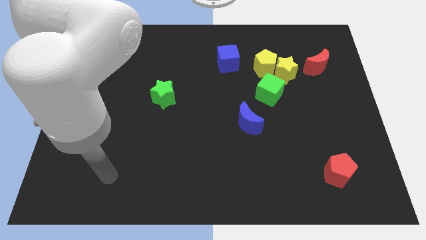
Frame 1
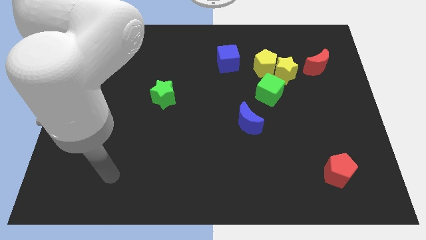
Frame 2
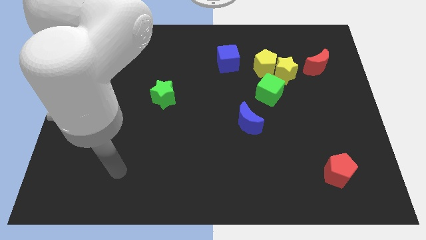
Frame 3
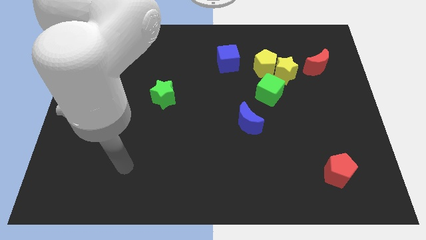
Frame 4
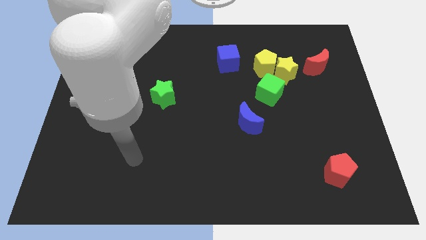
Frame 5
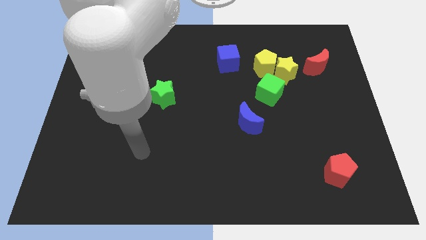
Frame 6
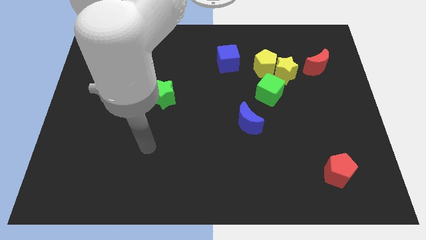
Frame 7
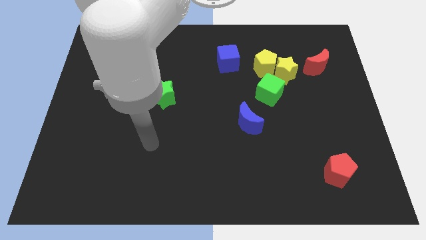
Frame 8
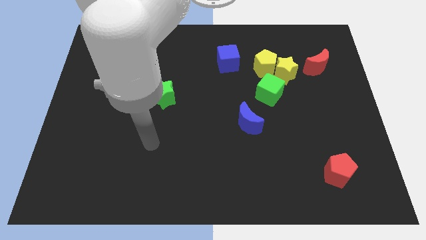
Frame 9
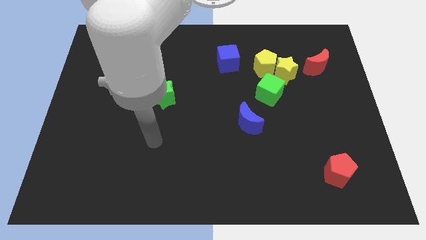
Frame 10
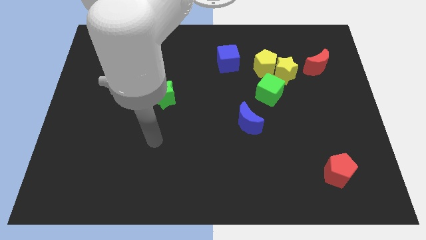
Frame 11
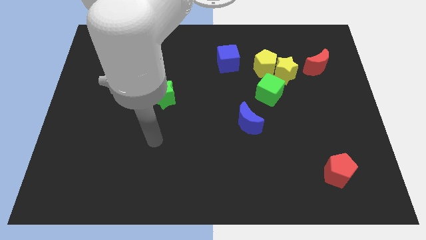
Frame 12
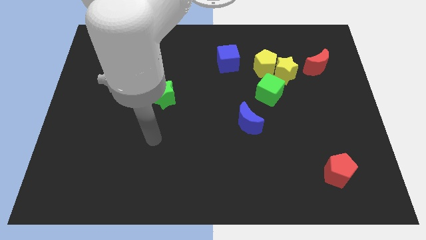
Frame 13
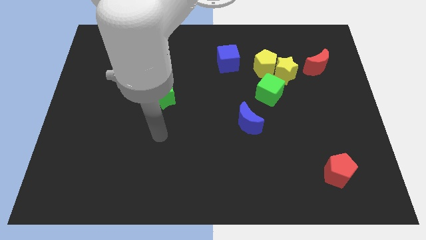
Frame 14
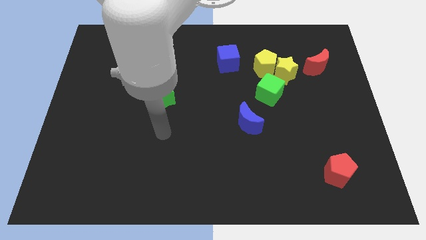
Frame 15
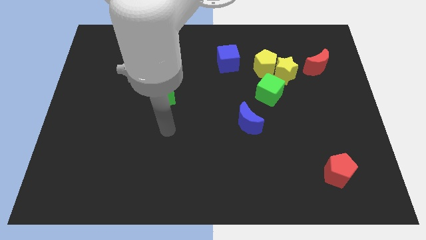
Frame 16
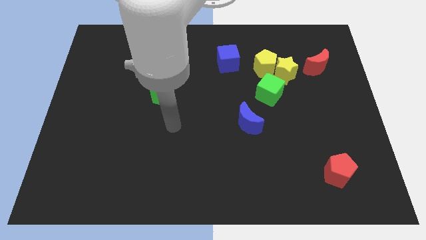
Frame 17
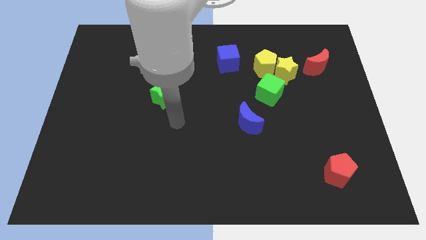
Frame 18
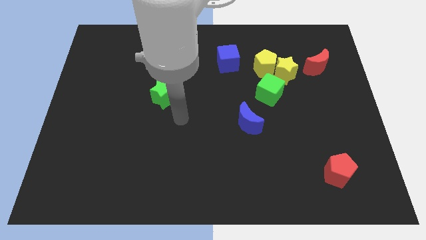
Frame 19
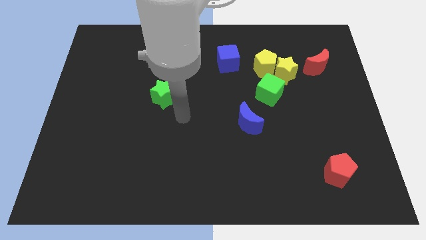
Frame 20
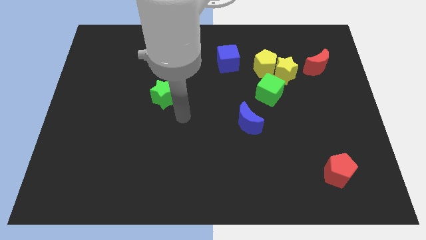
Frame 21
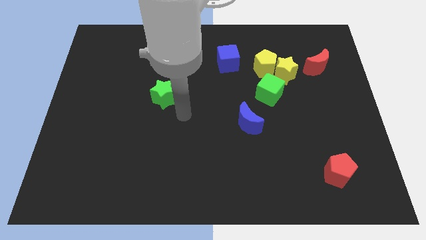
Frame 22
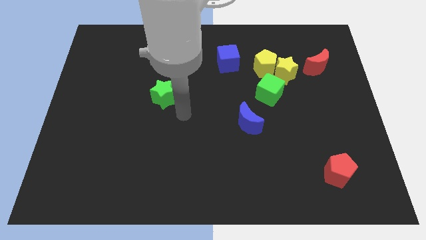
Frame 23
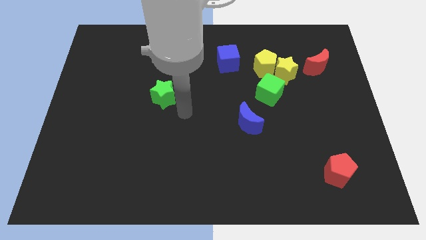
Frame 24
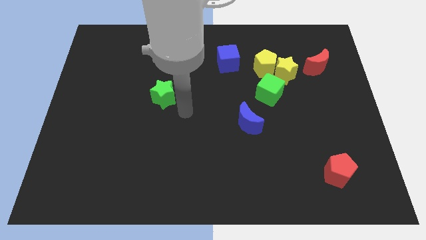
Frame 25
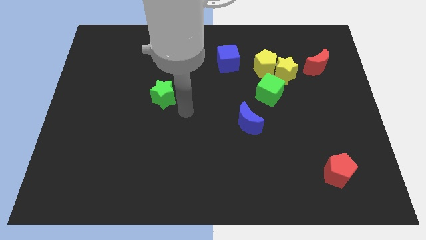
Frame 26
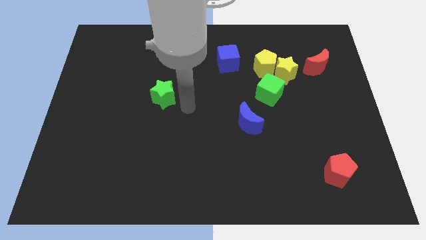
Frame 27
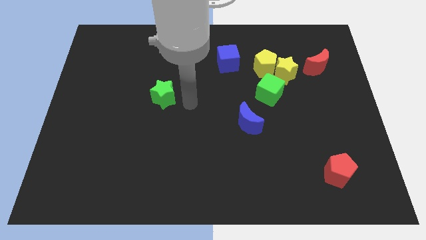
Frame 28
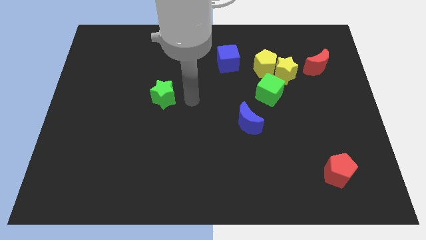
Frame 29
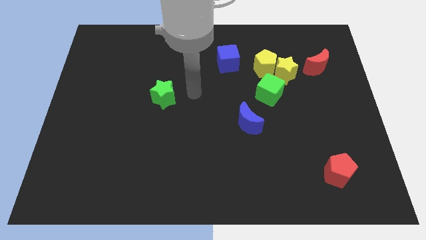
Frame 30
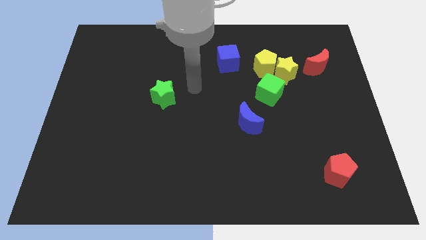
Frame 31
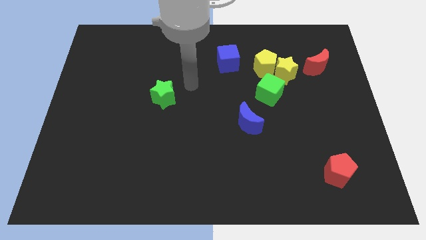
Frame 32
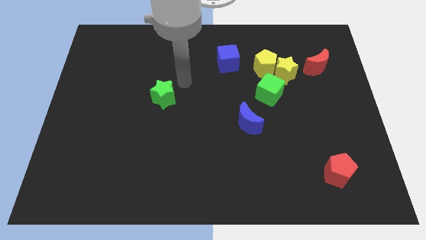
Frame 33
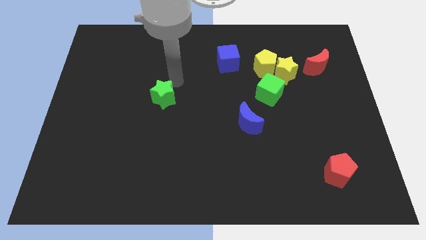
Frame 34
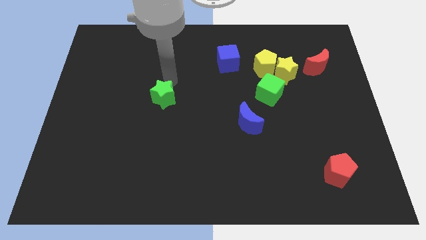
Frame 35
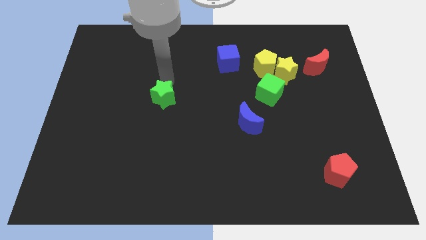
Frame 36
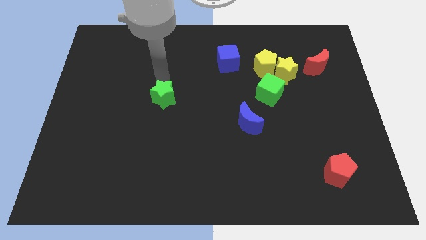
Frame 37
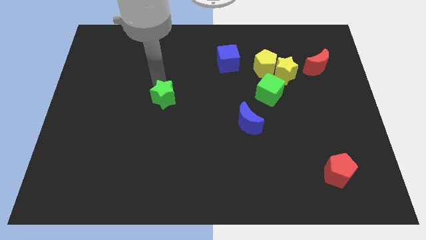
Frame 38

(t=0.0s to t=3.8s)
go and point your hand at the top of the green star

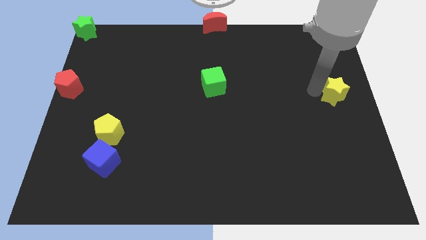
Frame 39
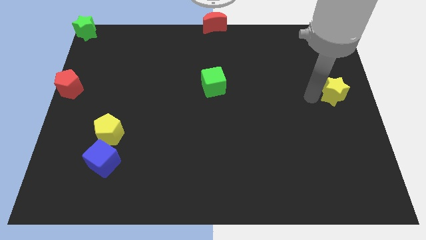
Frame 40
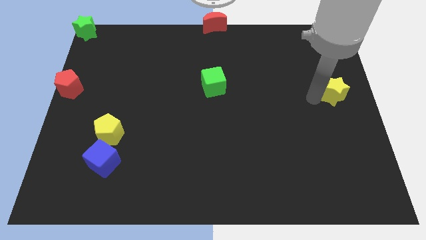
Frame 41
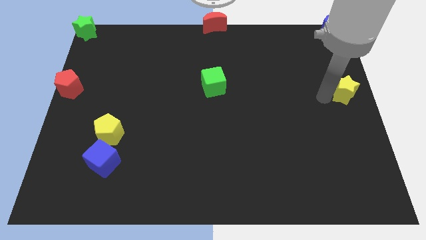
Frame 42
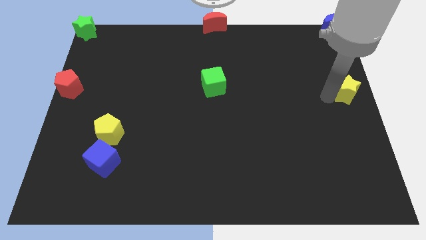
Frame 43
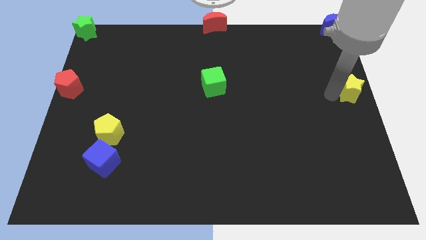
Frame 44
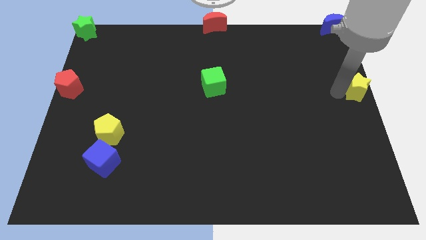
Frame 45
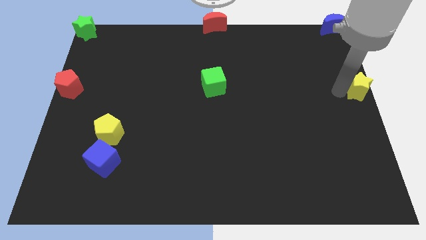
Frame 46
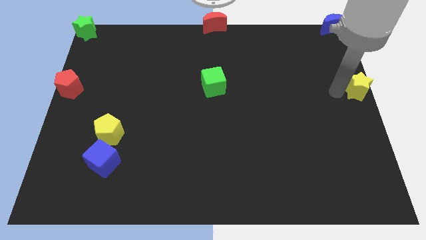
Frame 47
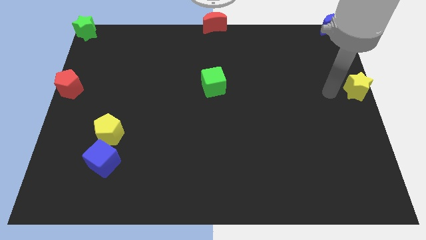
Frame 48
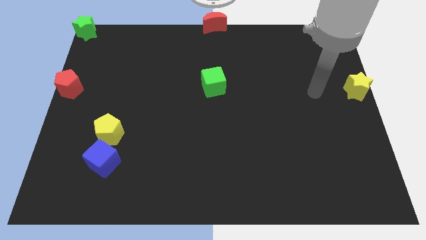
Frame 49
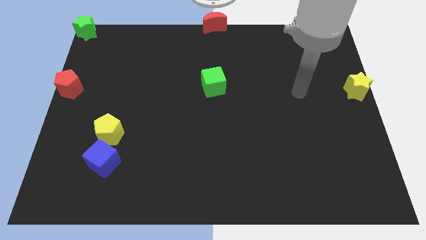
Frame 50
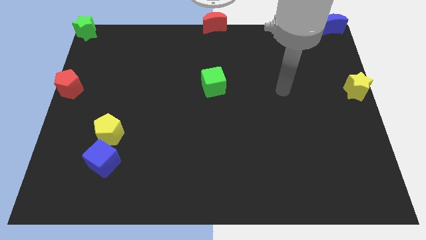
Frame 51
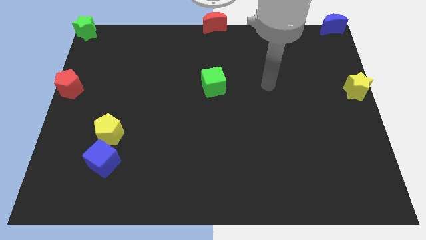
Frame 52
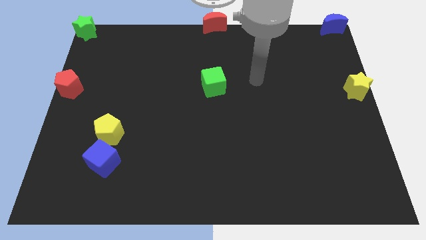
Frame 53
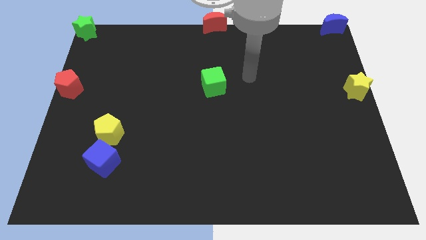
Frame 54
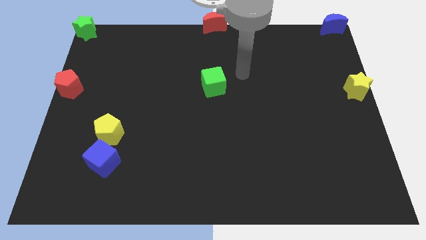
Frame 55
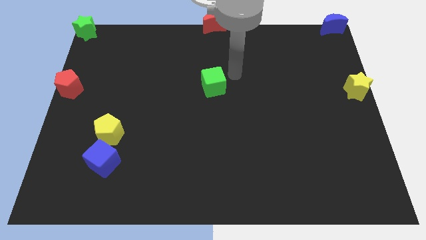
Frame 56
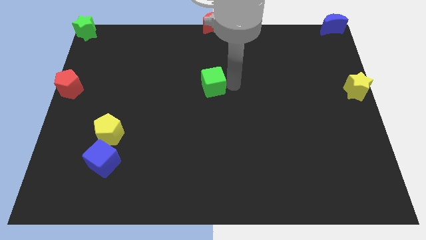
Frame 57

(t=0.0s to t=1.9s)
push the yellow star to the right center of the board

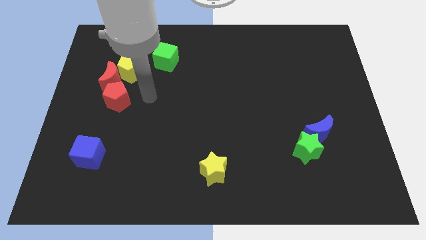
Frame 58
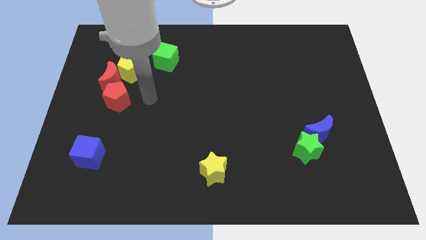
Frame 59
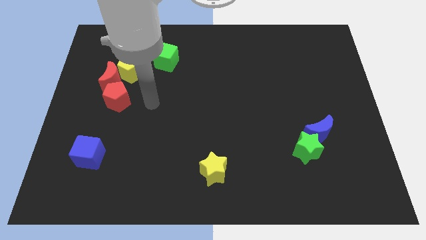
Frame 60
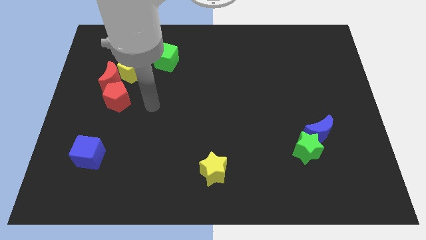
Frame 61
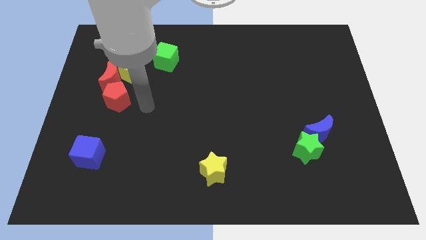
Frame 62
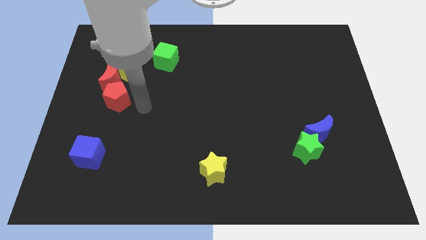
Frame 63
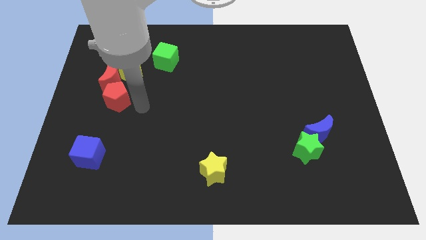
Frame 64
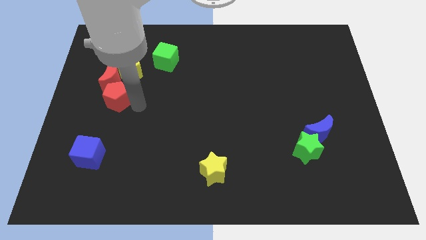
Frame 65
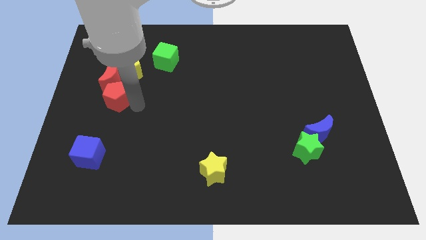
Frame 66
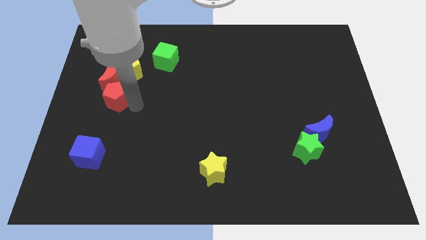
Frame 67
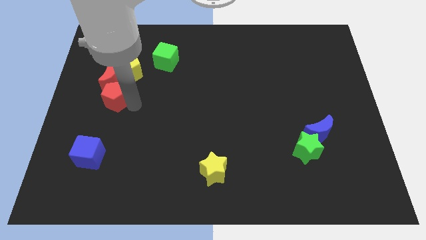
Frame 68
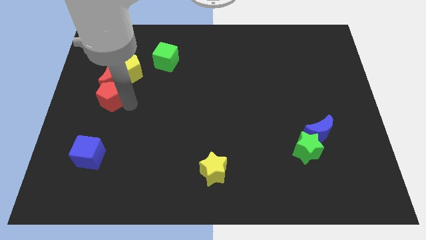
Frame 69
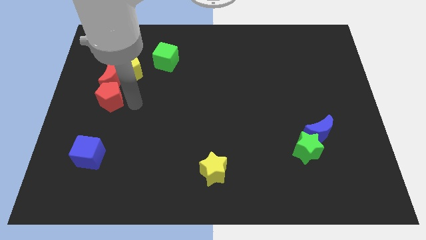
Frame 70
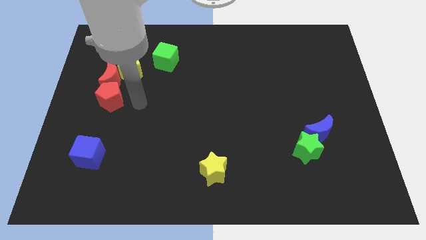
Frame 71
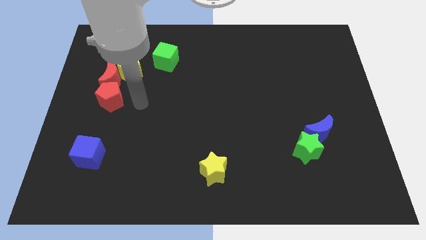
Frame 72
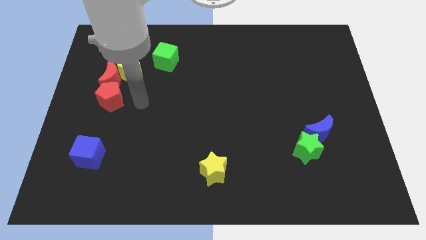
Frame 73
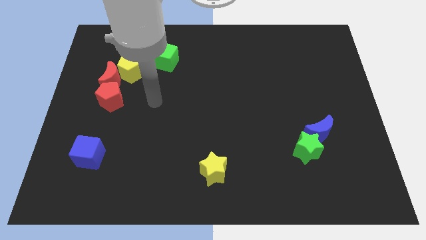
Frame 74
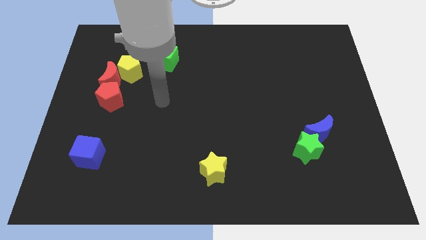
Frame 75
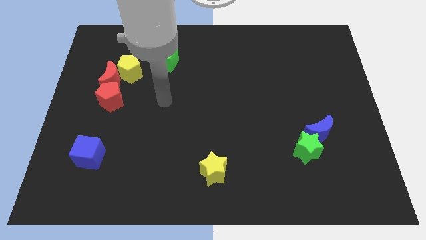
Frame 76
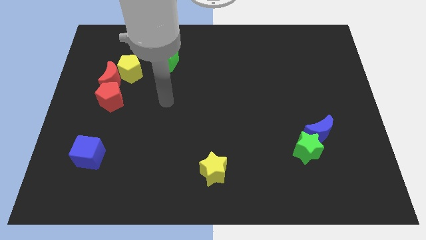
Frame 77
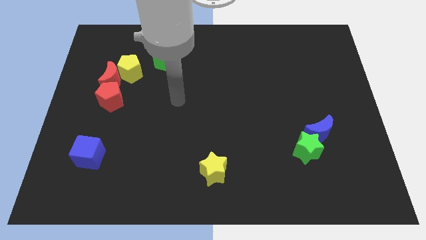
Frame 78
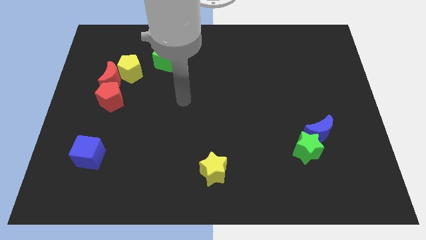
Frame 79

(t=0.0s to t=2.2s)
move the arm away from the red pentagon

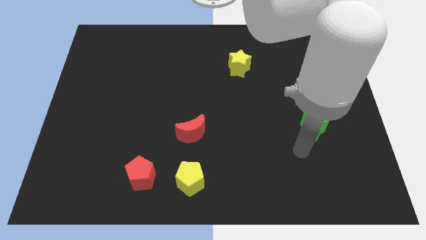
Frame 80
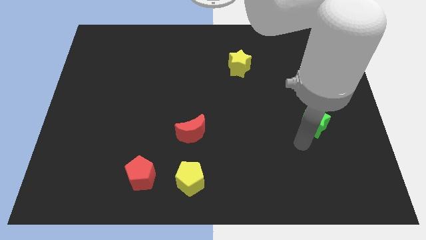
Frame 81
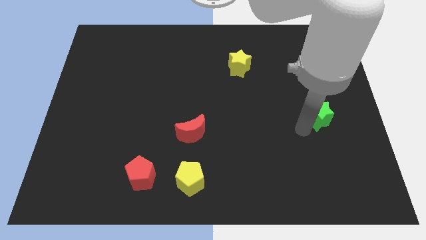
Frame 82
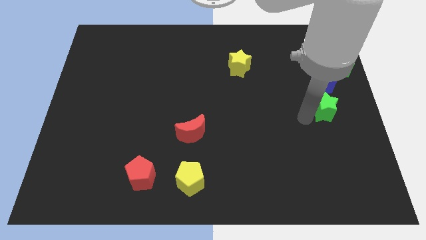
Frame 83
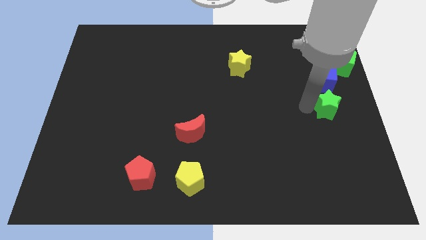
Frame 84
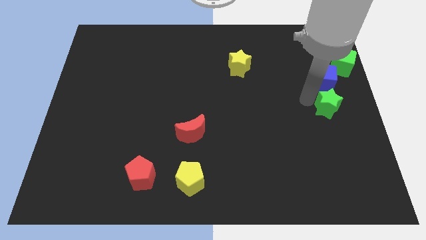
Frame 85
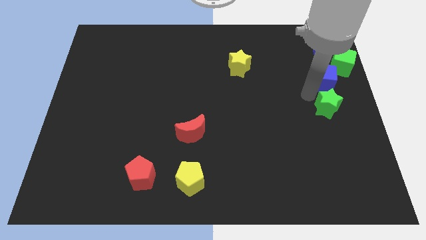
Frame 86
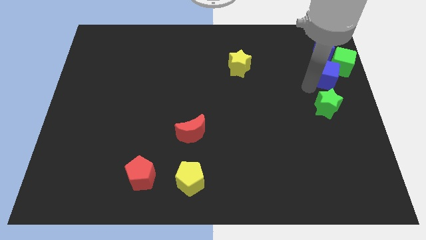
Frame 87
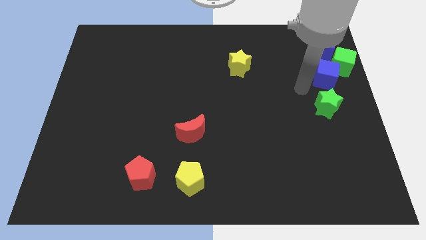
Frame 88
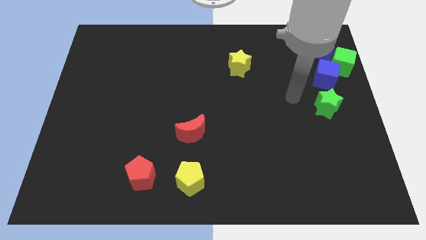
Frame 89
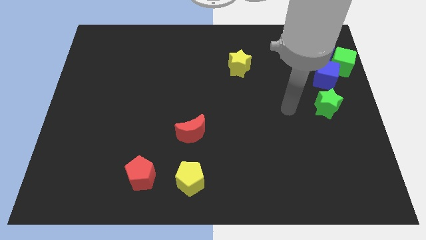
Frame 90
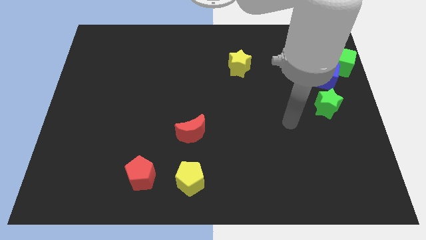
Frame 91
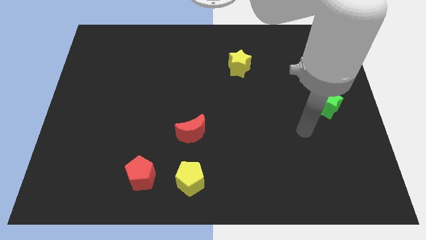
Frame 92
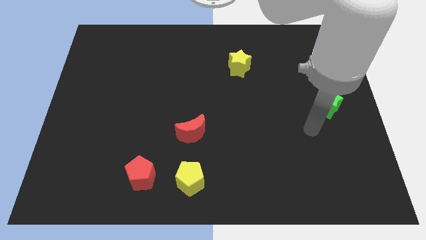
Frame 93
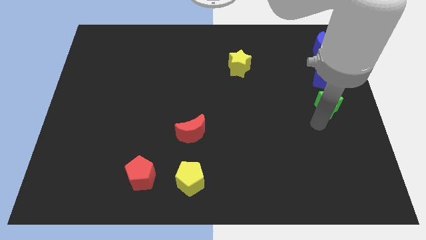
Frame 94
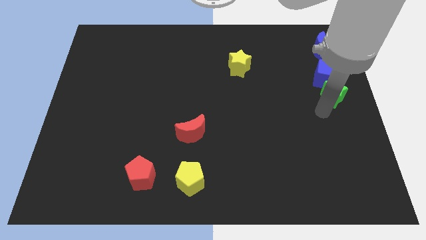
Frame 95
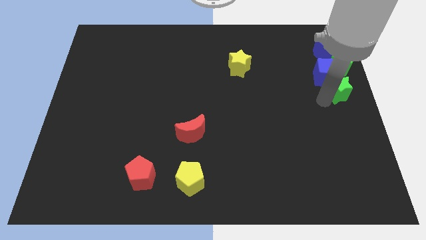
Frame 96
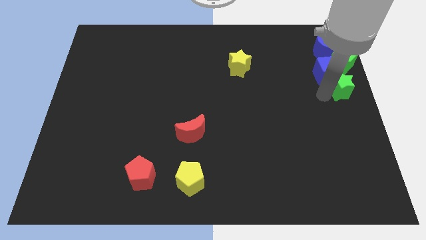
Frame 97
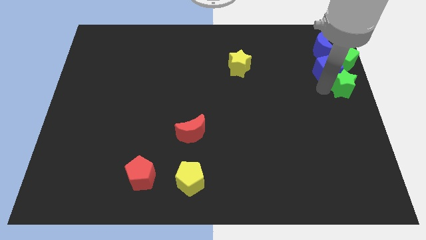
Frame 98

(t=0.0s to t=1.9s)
push the green star towards the blue cube
